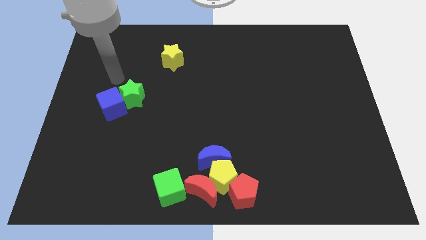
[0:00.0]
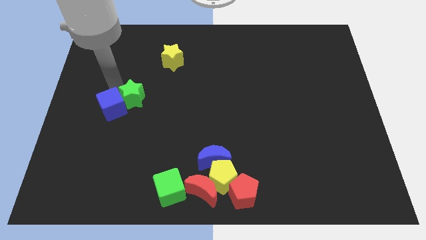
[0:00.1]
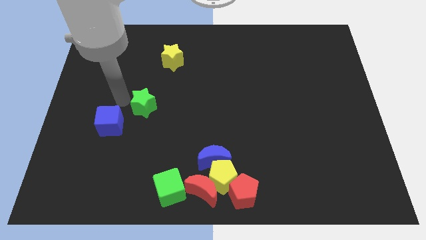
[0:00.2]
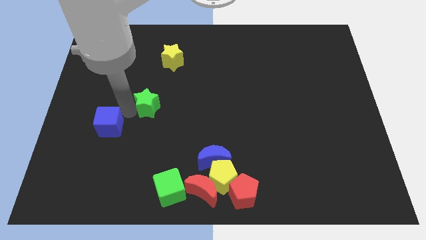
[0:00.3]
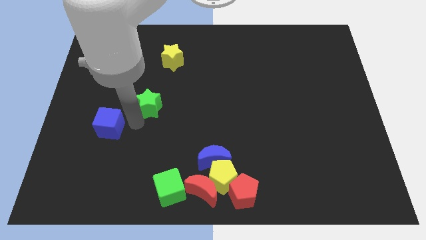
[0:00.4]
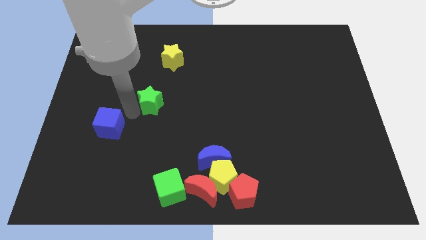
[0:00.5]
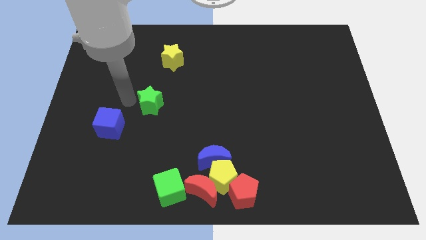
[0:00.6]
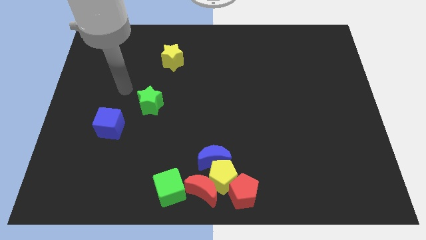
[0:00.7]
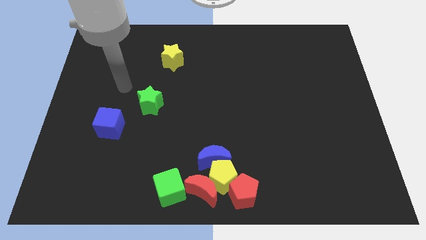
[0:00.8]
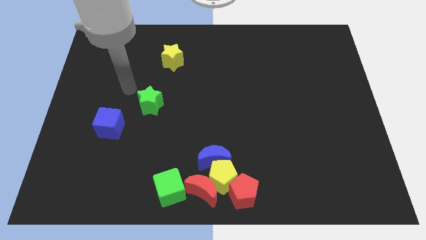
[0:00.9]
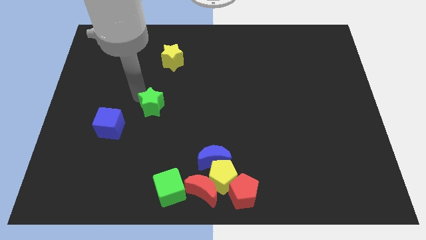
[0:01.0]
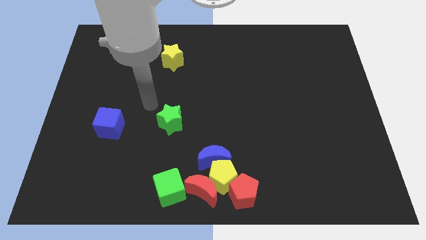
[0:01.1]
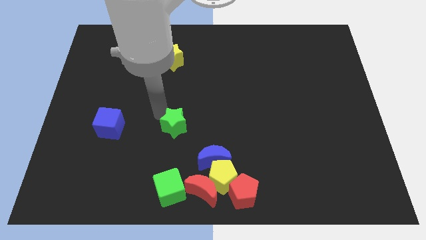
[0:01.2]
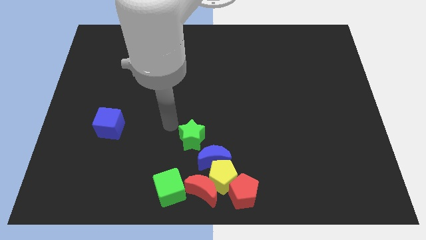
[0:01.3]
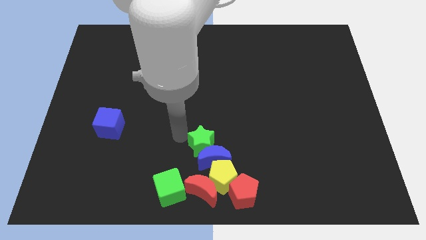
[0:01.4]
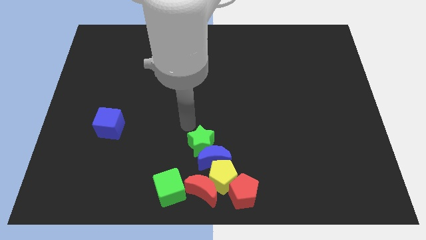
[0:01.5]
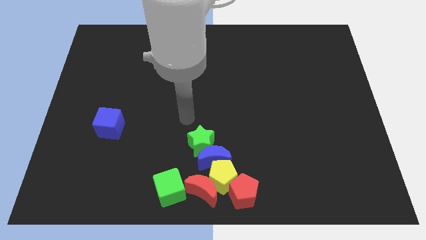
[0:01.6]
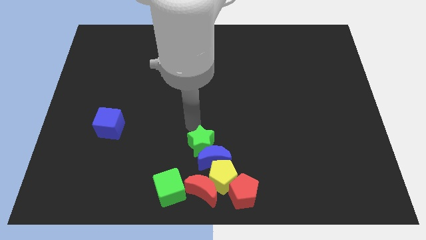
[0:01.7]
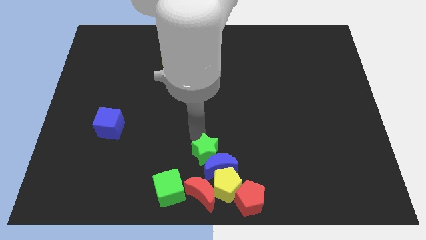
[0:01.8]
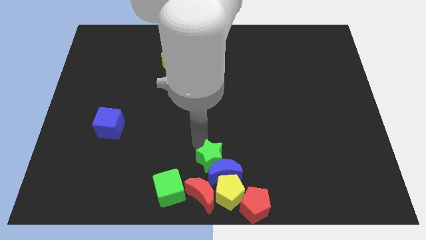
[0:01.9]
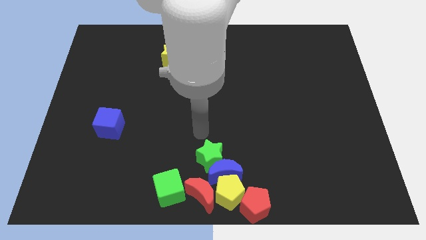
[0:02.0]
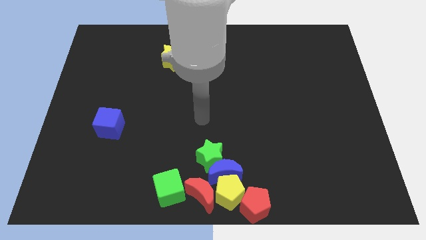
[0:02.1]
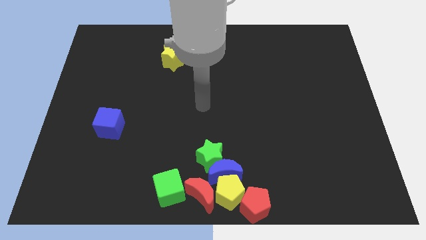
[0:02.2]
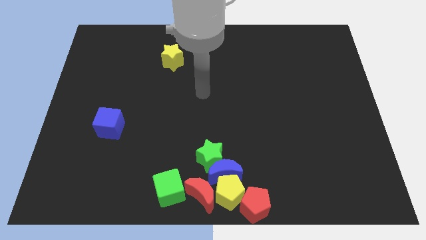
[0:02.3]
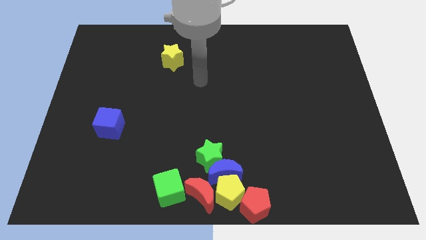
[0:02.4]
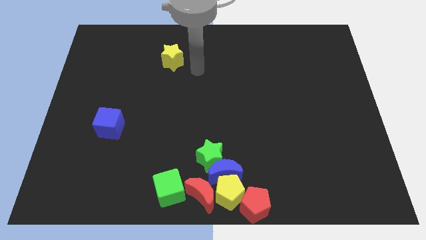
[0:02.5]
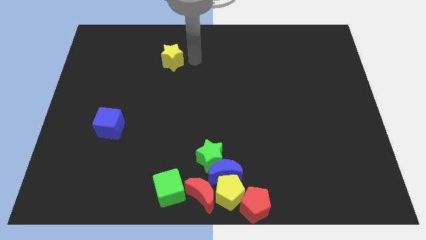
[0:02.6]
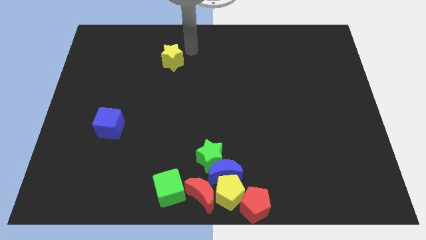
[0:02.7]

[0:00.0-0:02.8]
move green star left above the blue moon

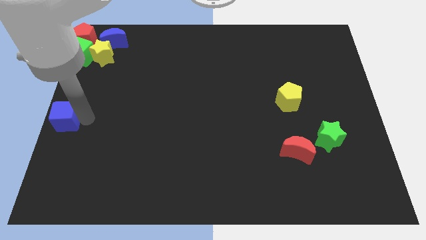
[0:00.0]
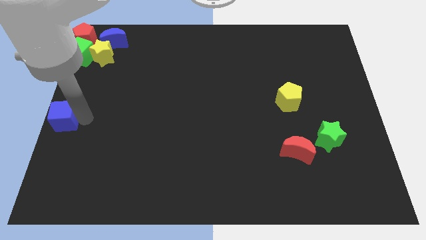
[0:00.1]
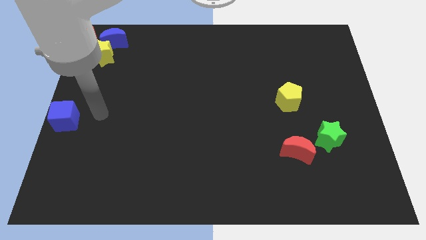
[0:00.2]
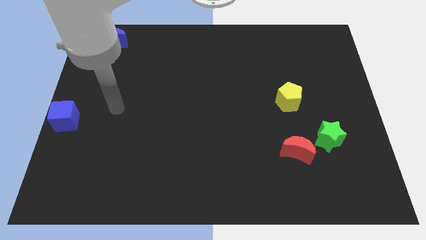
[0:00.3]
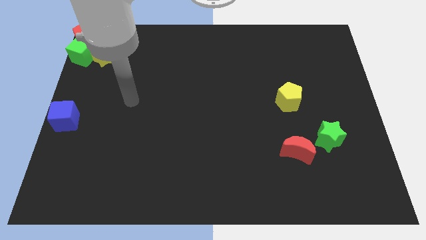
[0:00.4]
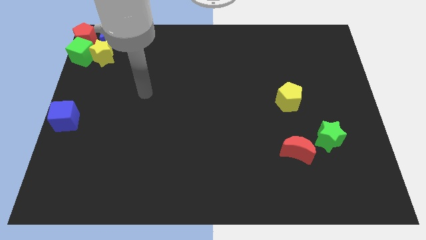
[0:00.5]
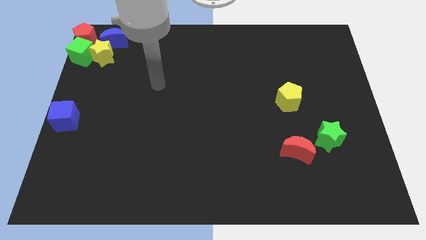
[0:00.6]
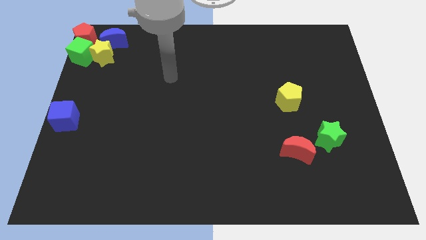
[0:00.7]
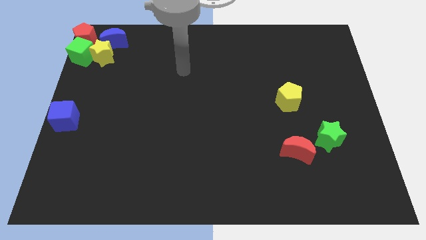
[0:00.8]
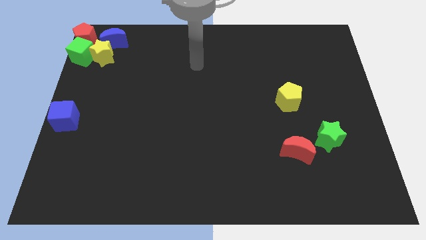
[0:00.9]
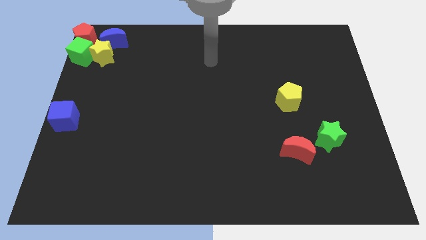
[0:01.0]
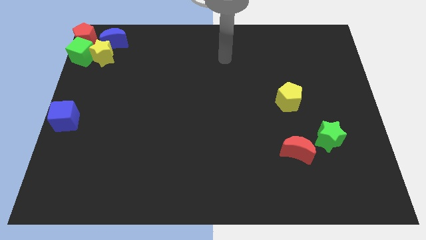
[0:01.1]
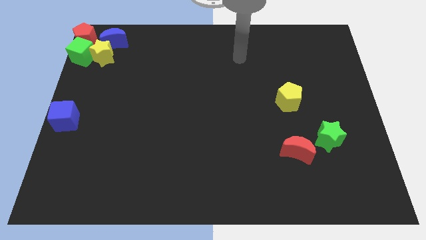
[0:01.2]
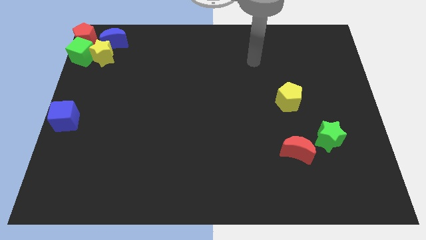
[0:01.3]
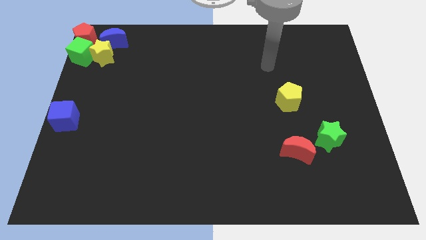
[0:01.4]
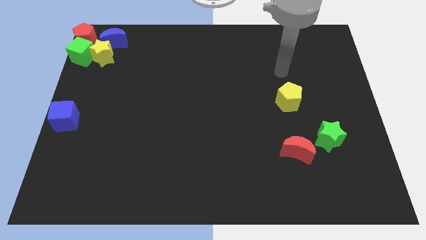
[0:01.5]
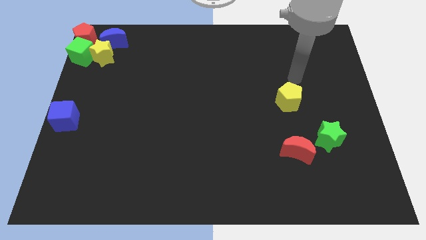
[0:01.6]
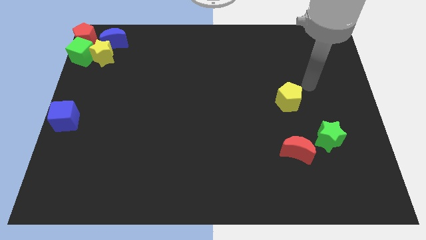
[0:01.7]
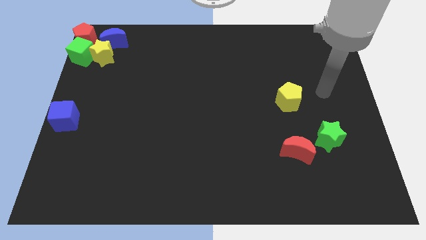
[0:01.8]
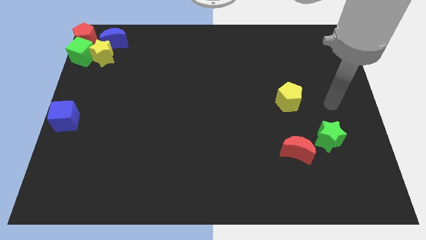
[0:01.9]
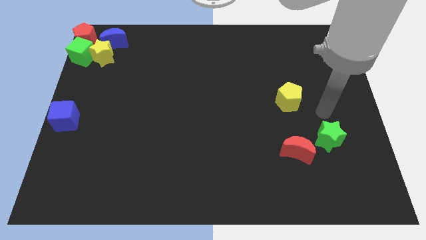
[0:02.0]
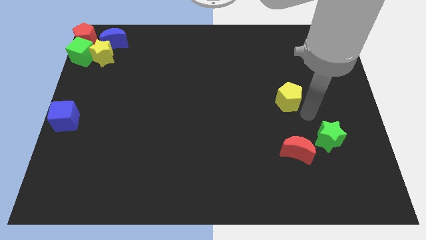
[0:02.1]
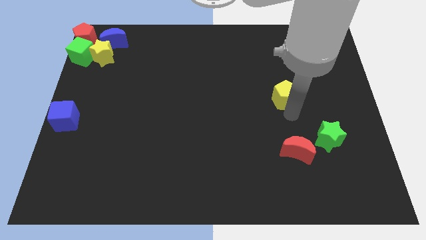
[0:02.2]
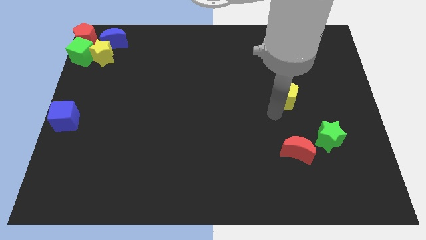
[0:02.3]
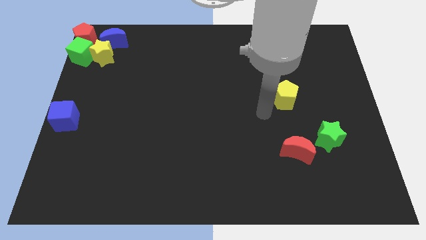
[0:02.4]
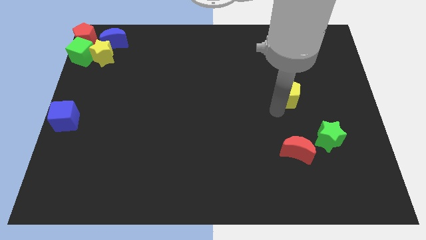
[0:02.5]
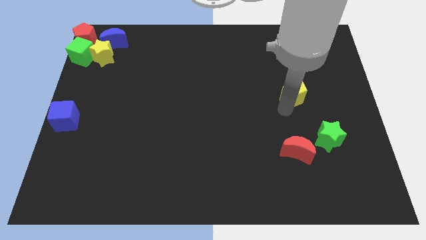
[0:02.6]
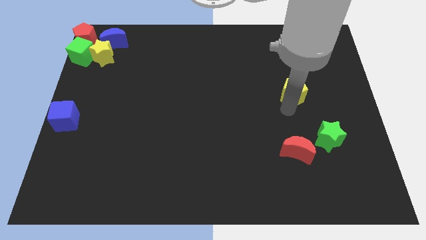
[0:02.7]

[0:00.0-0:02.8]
move your arm away from blue cube

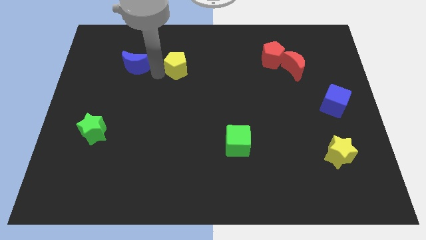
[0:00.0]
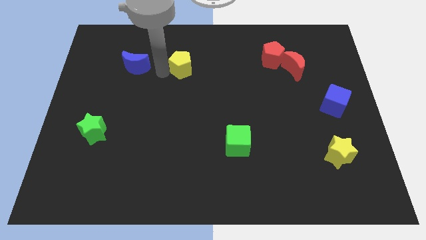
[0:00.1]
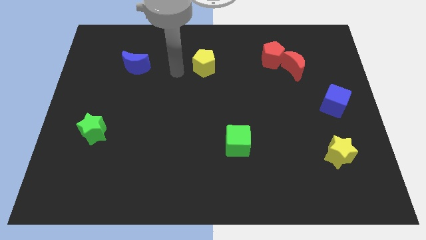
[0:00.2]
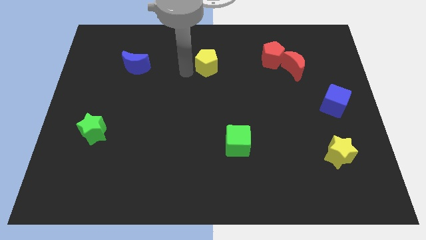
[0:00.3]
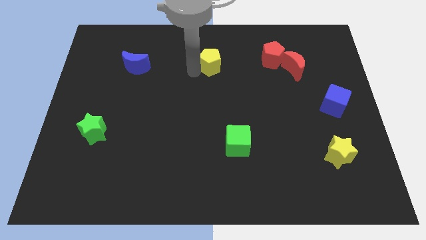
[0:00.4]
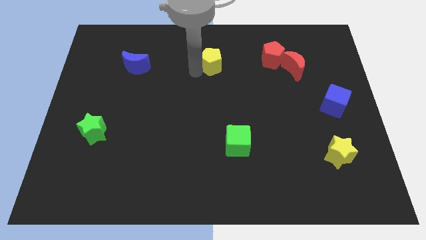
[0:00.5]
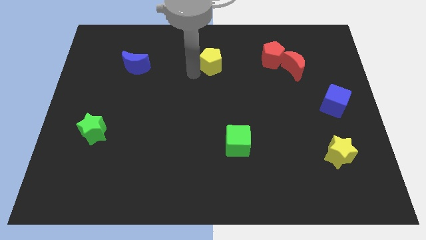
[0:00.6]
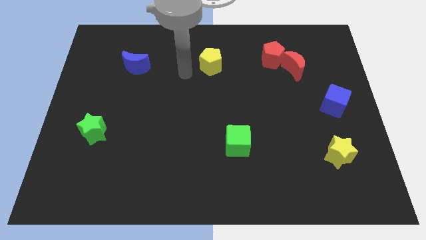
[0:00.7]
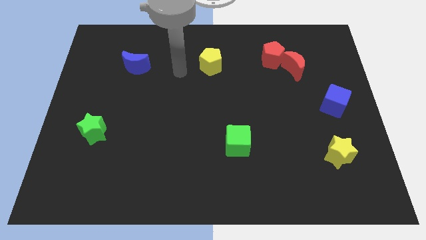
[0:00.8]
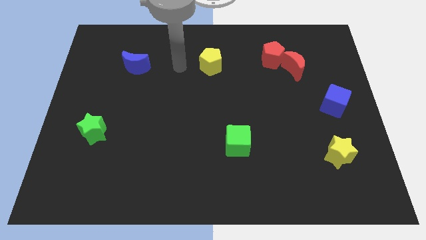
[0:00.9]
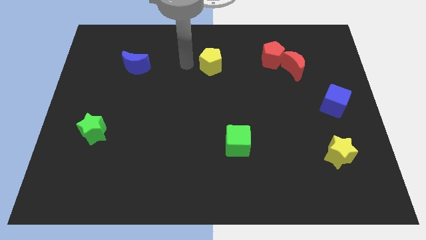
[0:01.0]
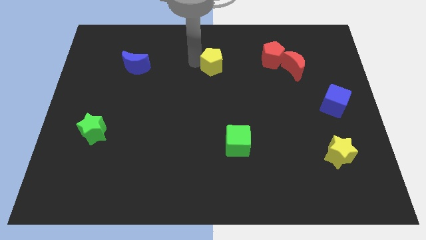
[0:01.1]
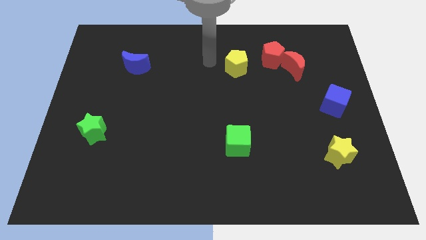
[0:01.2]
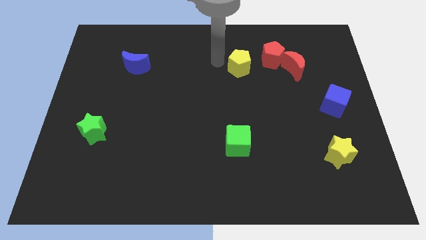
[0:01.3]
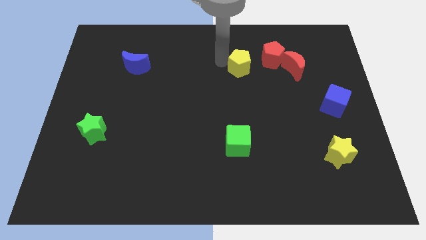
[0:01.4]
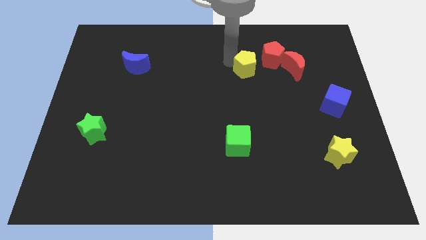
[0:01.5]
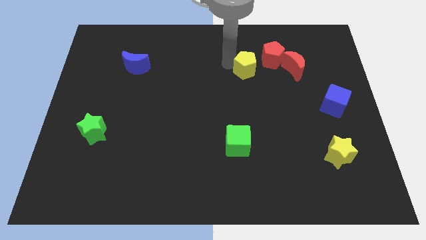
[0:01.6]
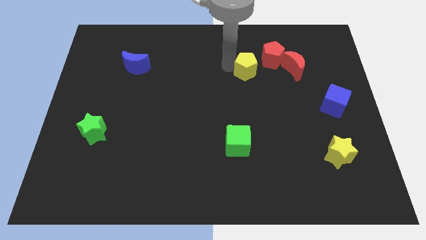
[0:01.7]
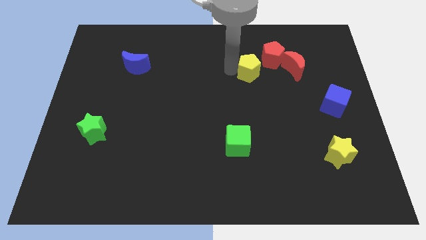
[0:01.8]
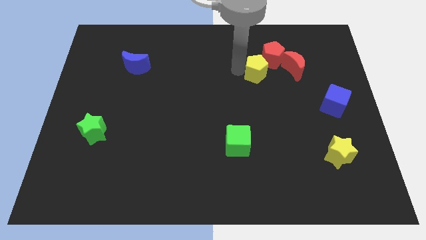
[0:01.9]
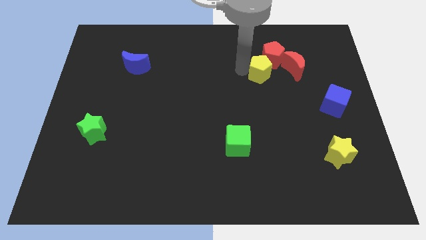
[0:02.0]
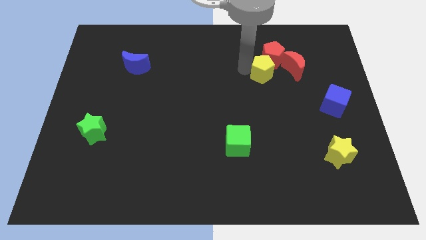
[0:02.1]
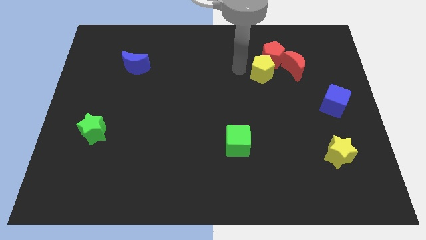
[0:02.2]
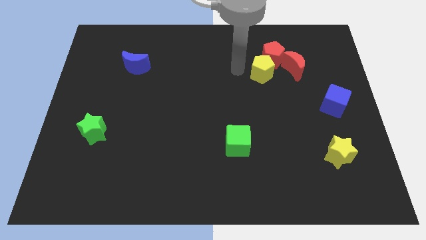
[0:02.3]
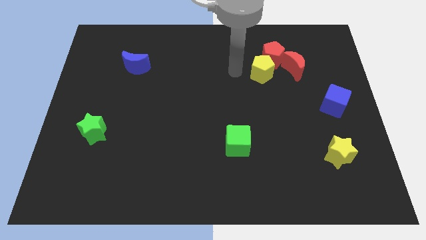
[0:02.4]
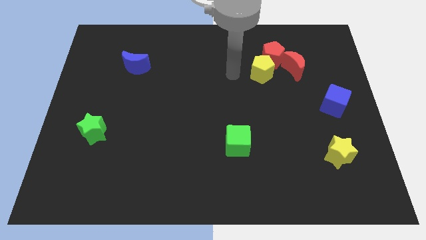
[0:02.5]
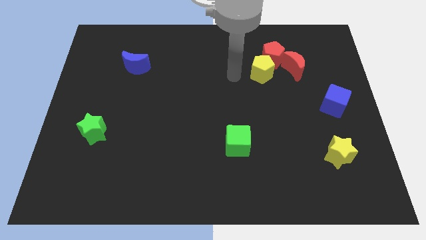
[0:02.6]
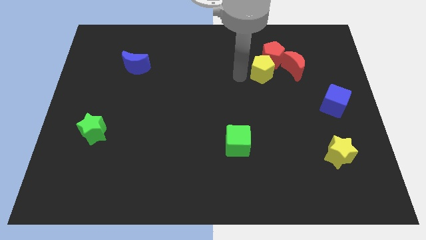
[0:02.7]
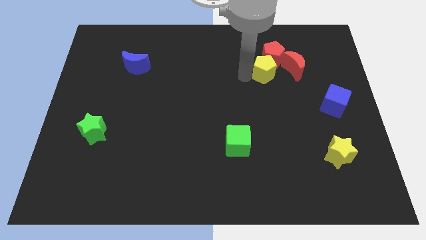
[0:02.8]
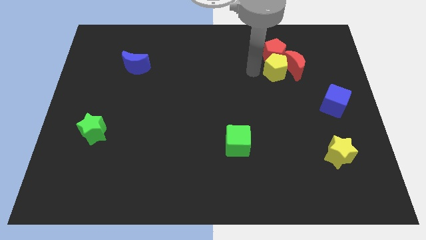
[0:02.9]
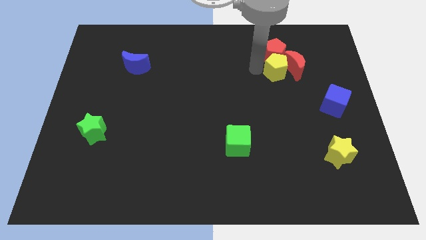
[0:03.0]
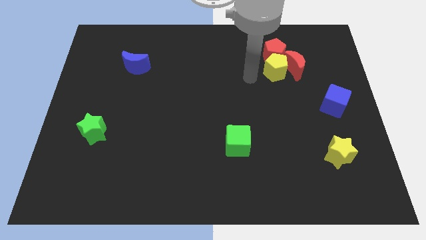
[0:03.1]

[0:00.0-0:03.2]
move the yellow pentagon near to the red pentagon and red moon

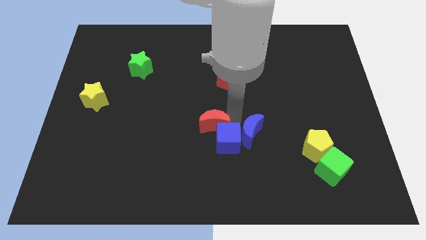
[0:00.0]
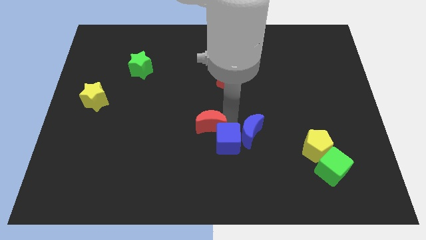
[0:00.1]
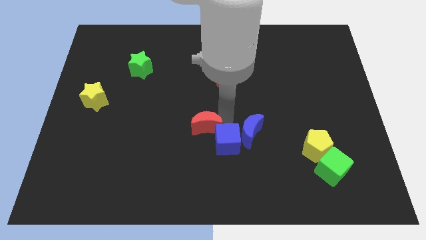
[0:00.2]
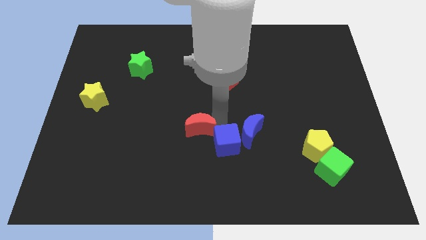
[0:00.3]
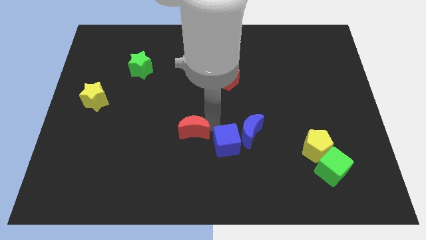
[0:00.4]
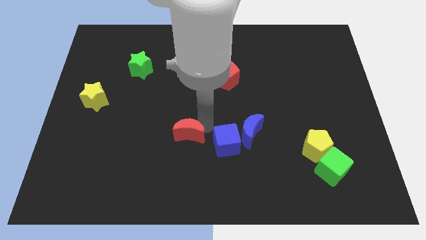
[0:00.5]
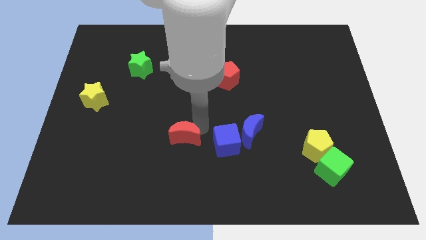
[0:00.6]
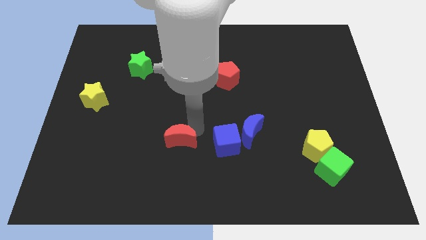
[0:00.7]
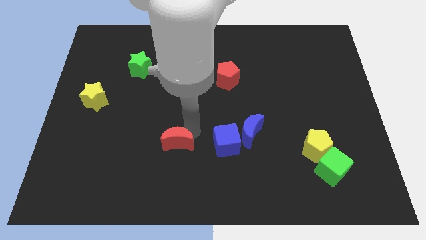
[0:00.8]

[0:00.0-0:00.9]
separate the blue cube and the red crescent
